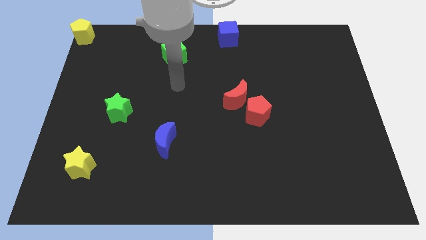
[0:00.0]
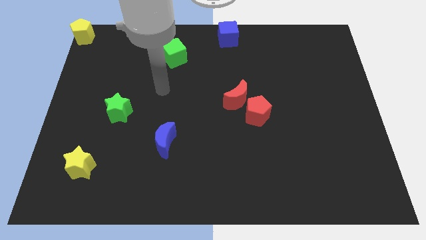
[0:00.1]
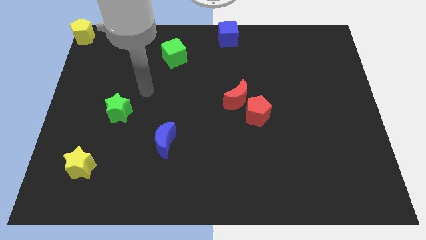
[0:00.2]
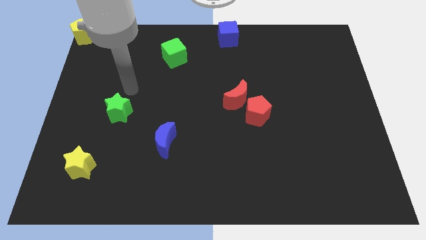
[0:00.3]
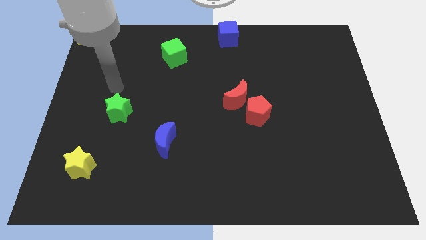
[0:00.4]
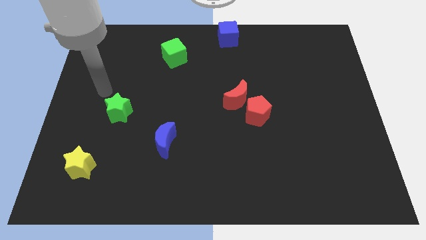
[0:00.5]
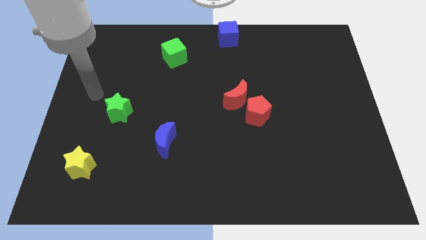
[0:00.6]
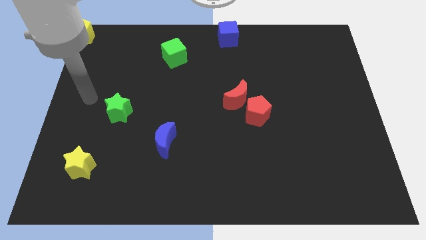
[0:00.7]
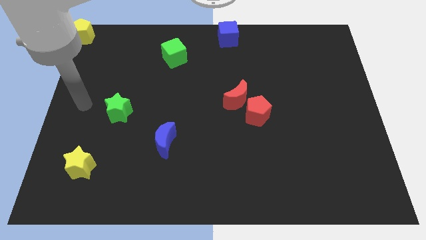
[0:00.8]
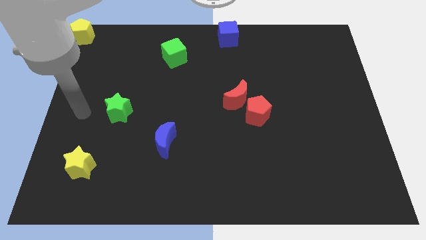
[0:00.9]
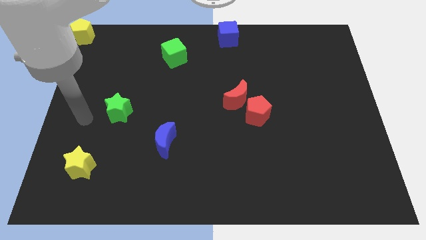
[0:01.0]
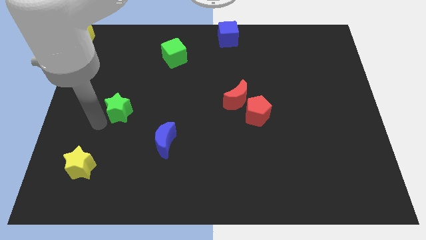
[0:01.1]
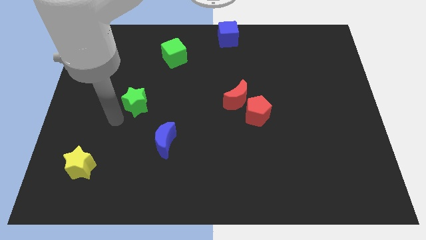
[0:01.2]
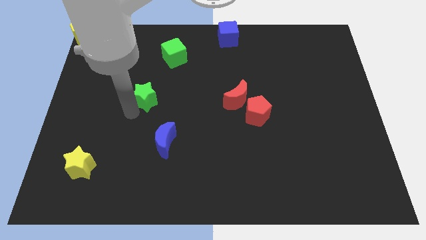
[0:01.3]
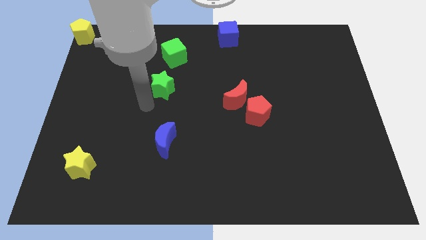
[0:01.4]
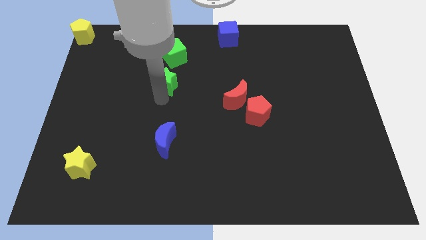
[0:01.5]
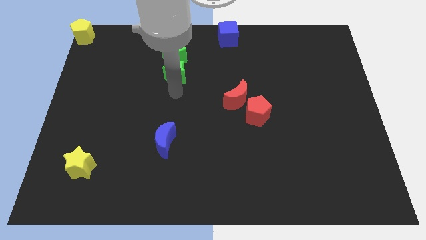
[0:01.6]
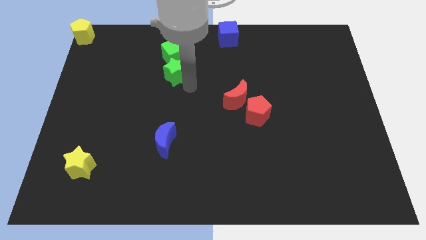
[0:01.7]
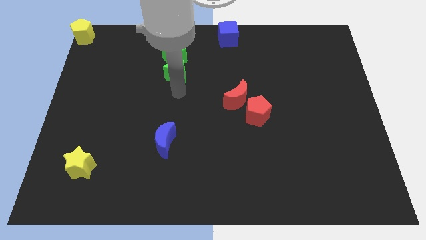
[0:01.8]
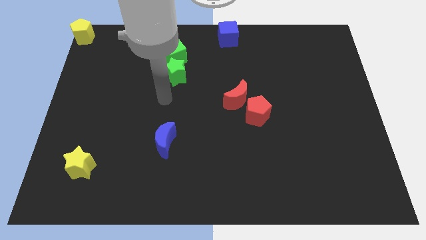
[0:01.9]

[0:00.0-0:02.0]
push the green star near to the green cube

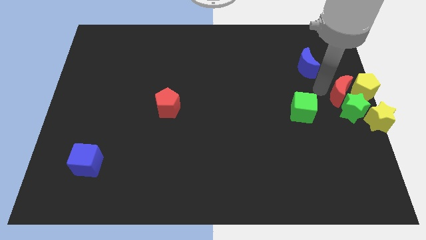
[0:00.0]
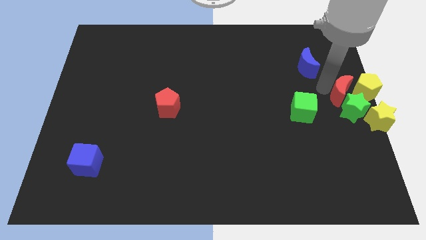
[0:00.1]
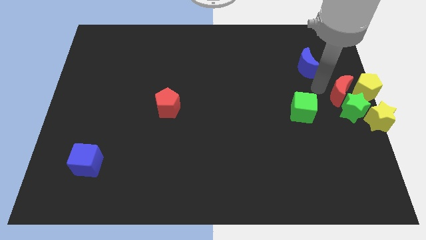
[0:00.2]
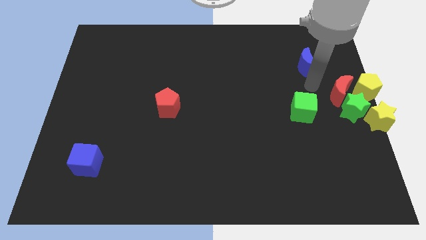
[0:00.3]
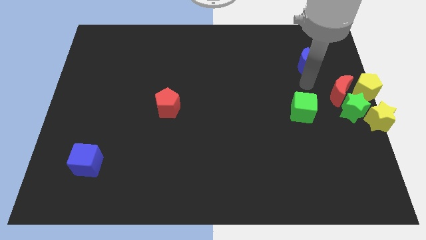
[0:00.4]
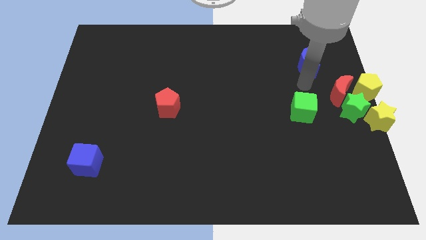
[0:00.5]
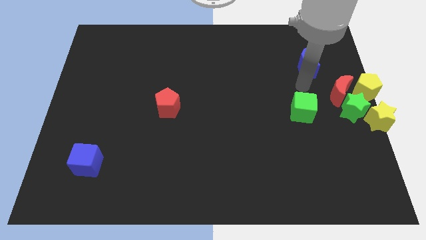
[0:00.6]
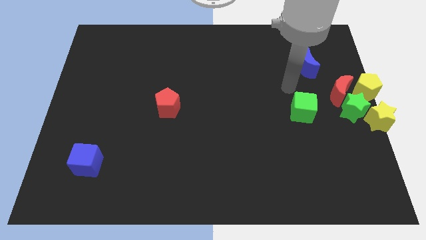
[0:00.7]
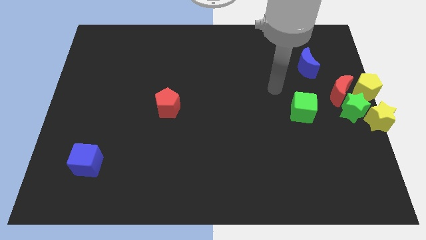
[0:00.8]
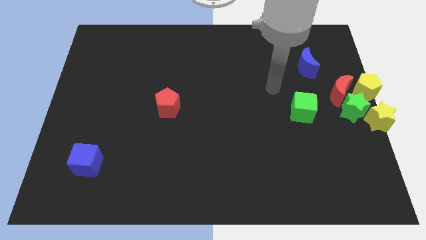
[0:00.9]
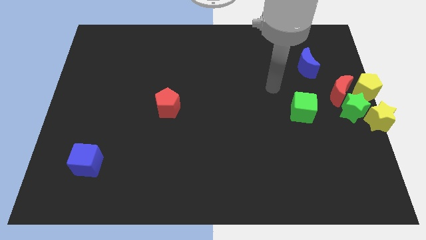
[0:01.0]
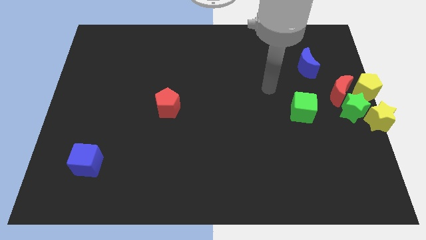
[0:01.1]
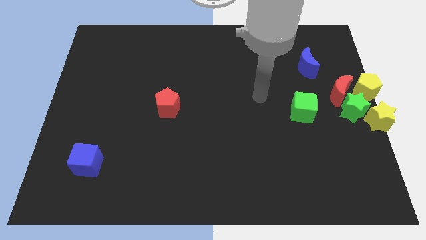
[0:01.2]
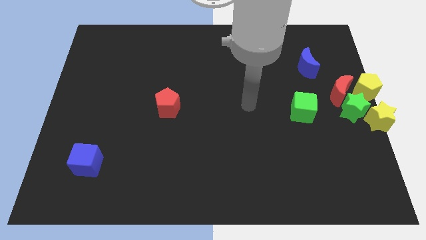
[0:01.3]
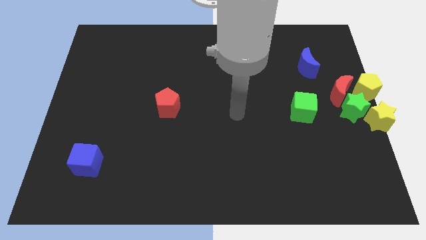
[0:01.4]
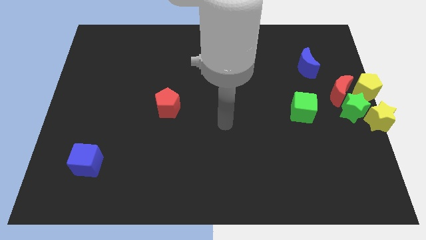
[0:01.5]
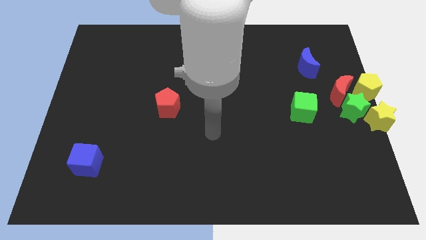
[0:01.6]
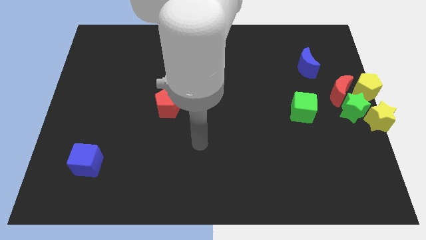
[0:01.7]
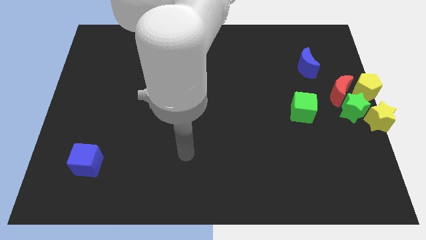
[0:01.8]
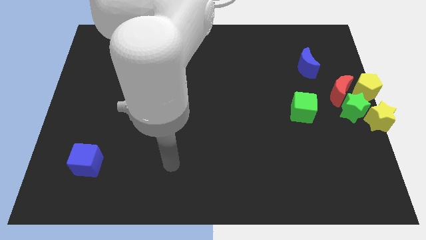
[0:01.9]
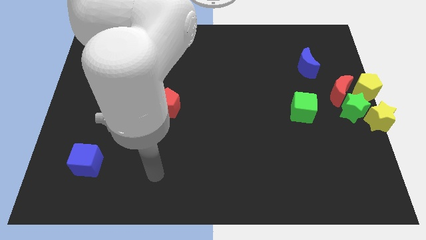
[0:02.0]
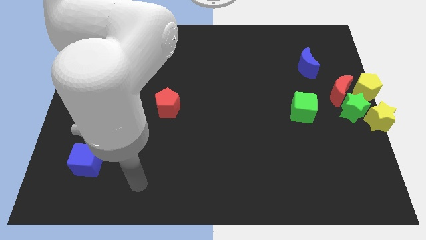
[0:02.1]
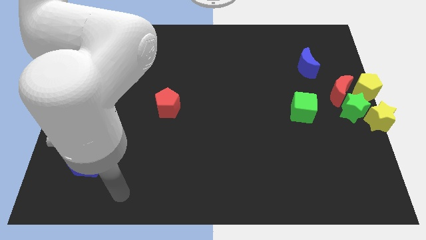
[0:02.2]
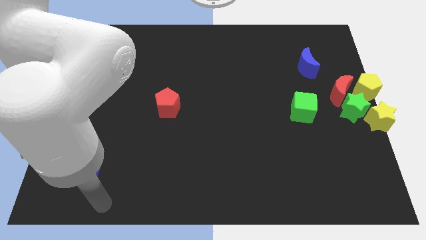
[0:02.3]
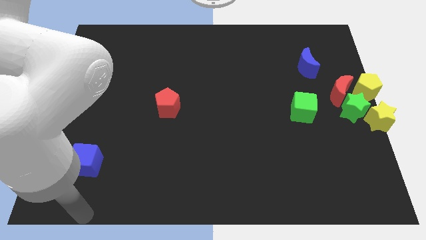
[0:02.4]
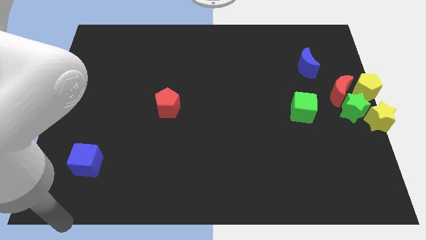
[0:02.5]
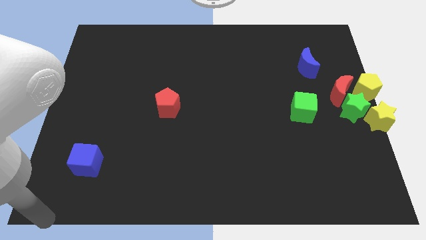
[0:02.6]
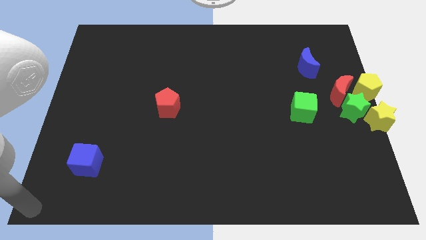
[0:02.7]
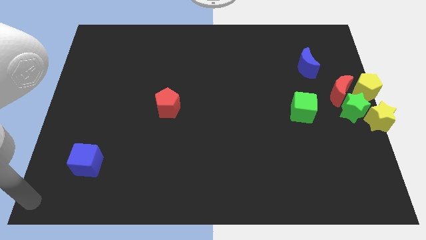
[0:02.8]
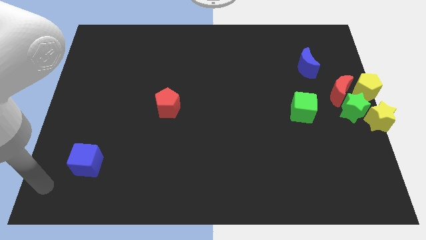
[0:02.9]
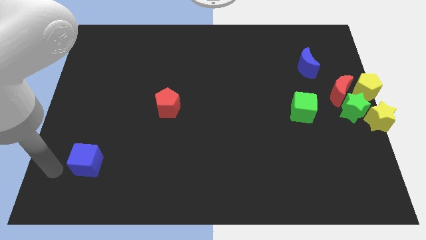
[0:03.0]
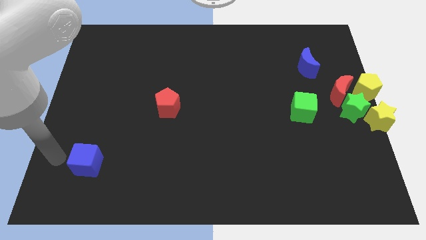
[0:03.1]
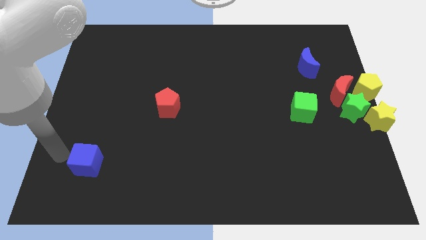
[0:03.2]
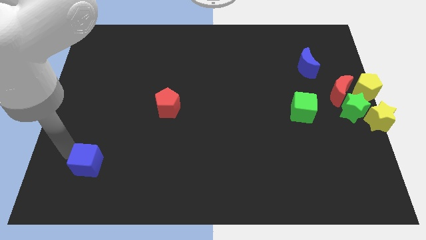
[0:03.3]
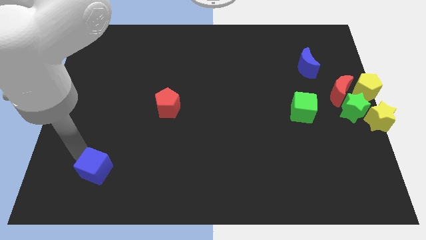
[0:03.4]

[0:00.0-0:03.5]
go away from the group of blocks

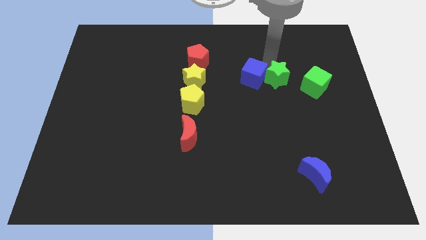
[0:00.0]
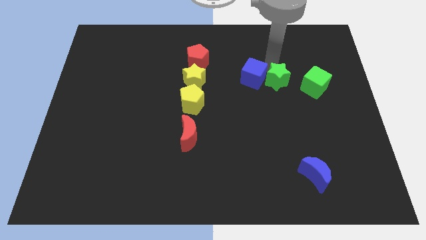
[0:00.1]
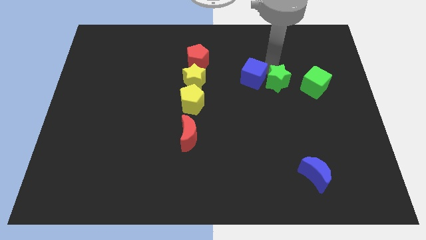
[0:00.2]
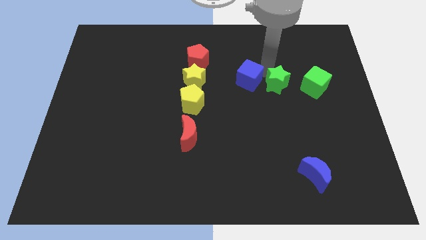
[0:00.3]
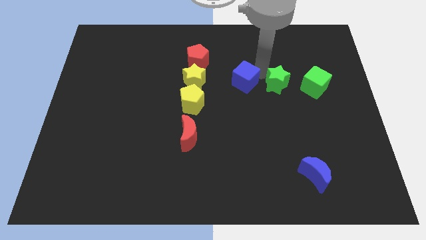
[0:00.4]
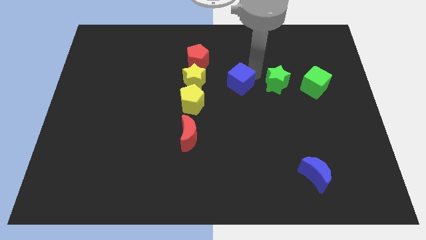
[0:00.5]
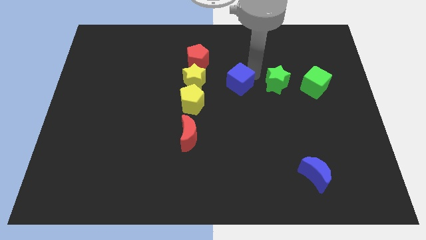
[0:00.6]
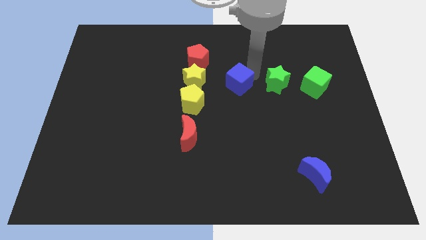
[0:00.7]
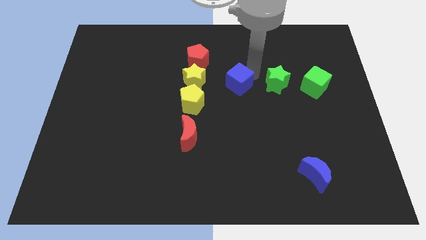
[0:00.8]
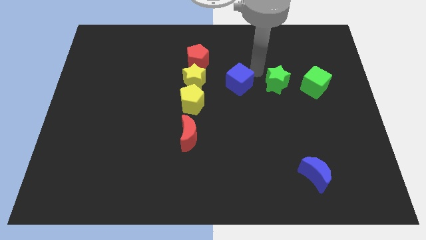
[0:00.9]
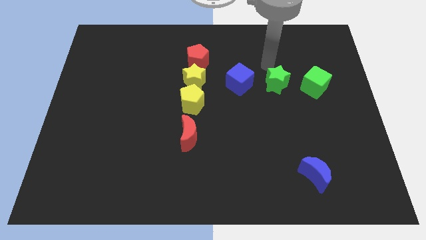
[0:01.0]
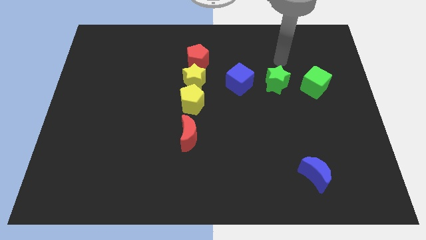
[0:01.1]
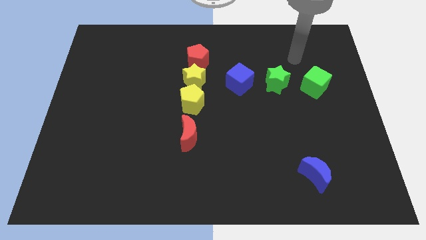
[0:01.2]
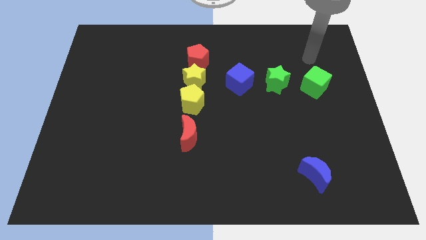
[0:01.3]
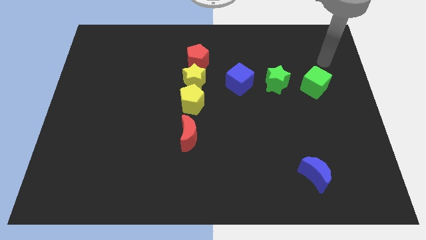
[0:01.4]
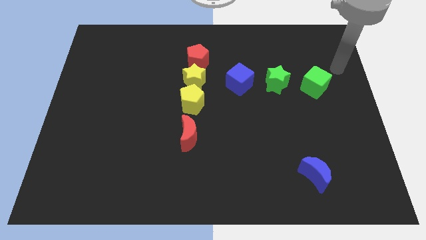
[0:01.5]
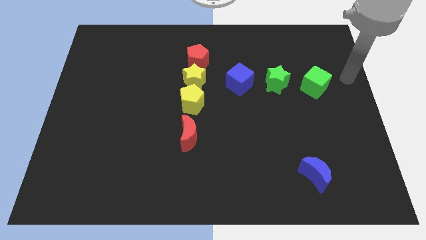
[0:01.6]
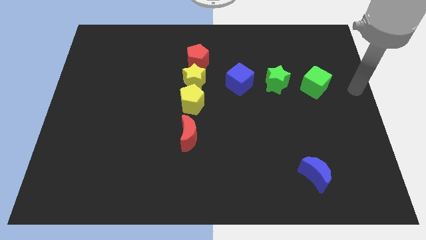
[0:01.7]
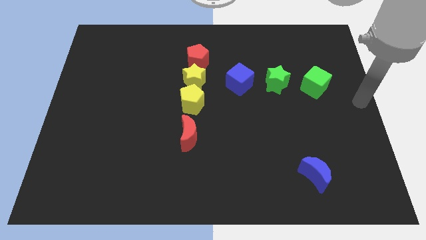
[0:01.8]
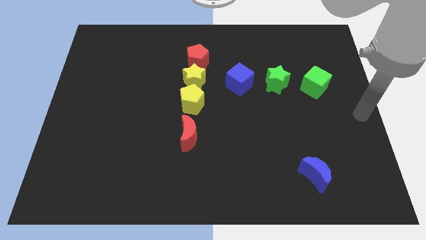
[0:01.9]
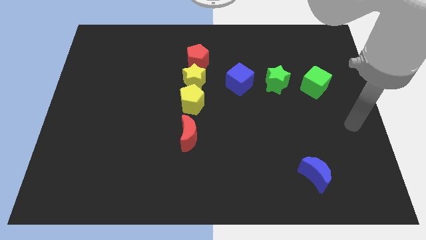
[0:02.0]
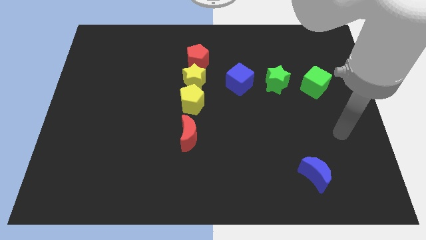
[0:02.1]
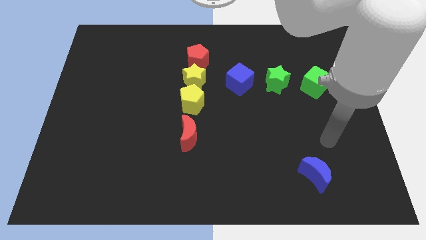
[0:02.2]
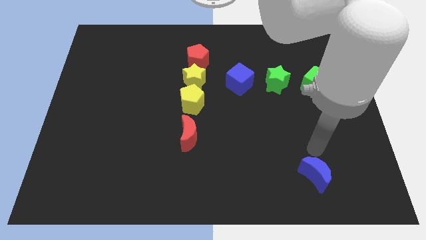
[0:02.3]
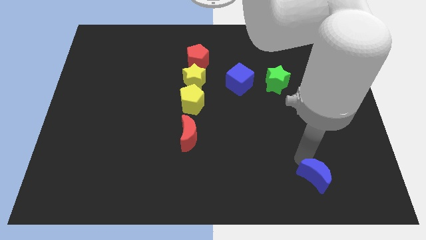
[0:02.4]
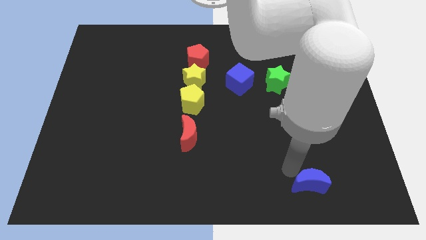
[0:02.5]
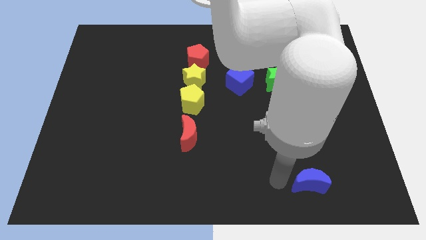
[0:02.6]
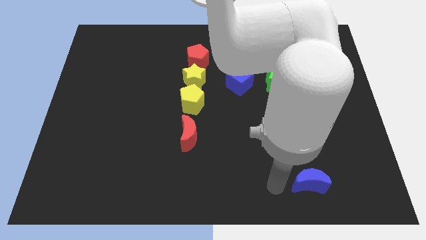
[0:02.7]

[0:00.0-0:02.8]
move your arm away from the blue cube

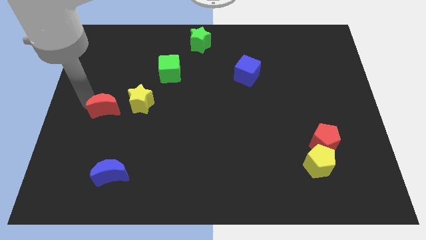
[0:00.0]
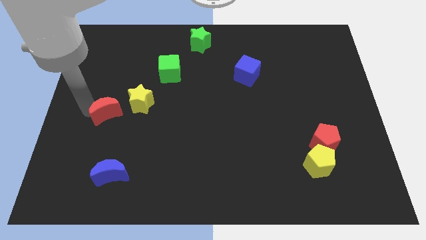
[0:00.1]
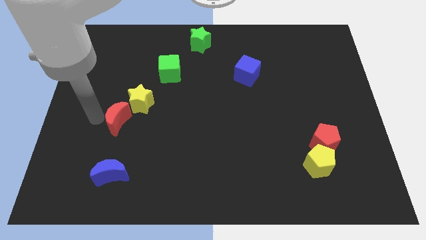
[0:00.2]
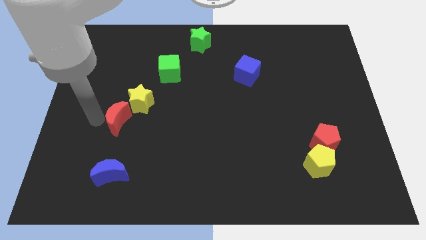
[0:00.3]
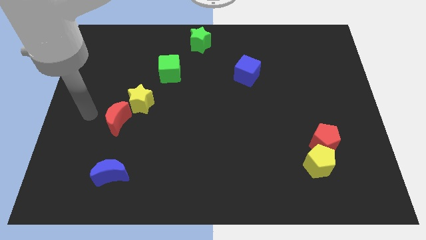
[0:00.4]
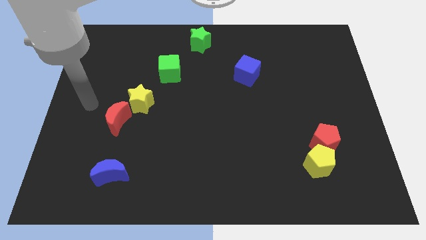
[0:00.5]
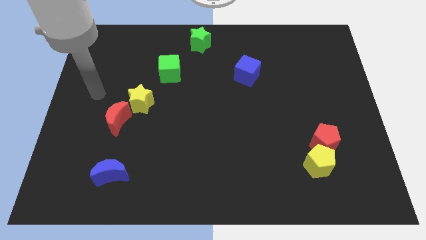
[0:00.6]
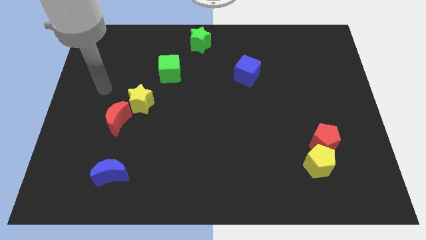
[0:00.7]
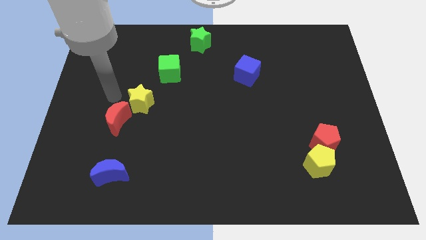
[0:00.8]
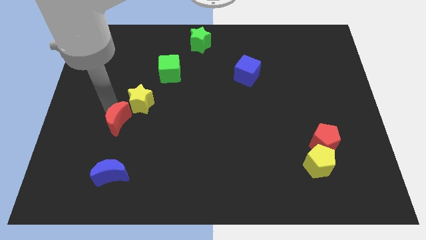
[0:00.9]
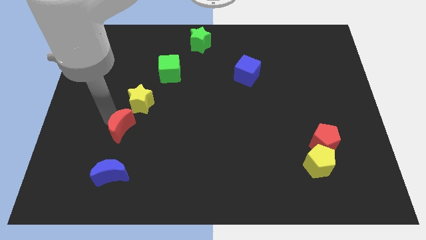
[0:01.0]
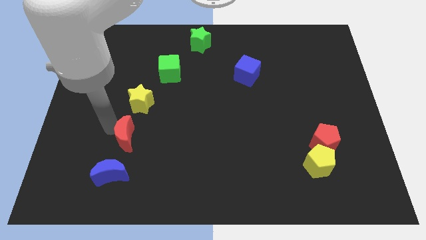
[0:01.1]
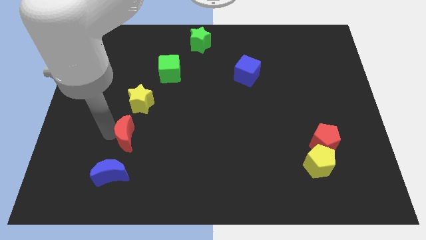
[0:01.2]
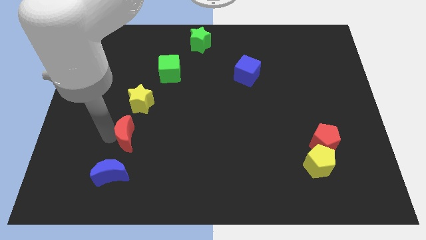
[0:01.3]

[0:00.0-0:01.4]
place red pentagon below the yellow star
